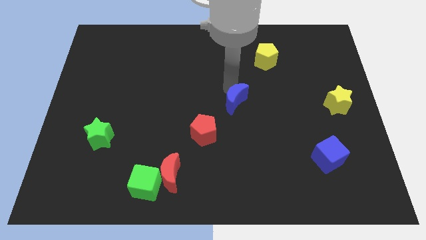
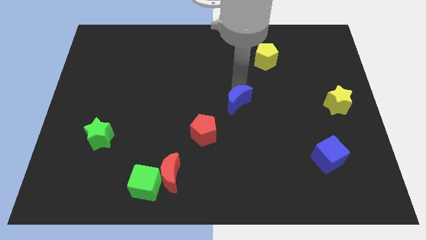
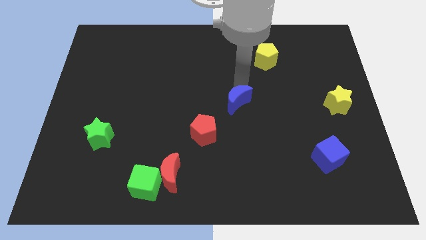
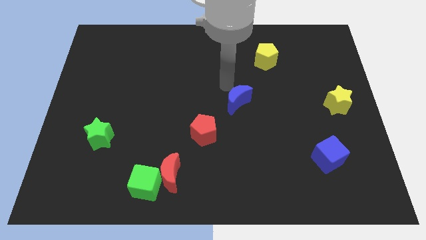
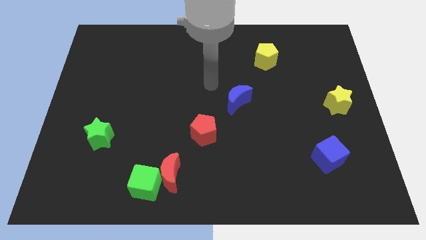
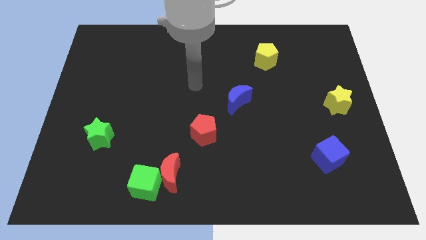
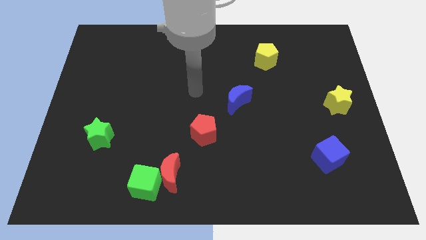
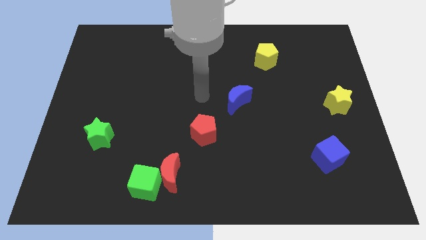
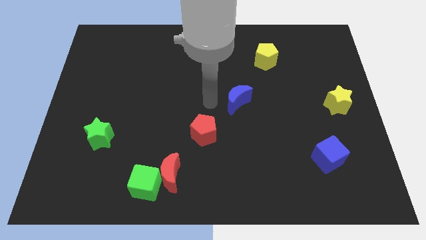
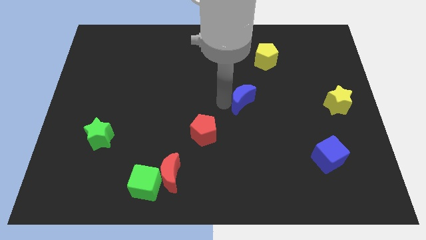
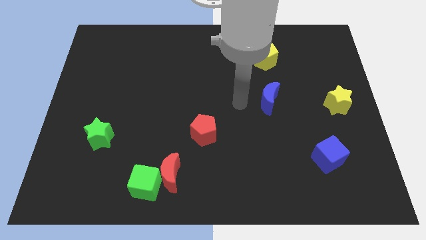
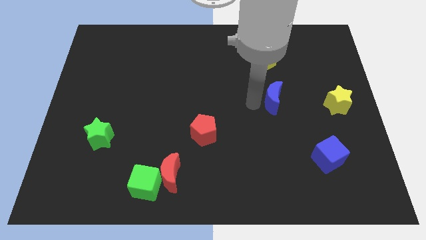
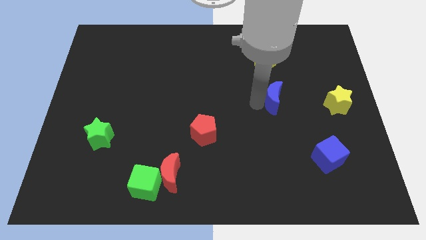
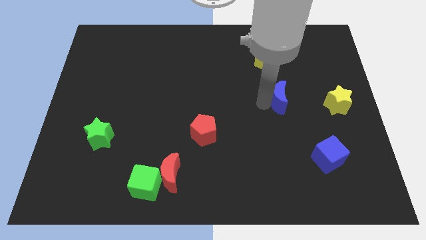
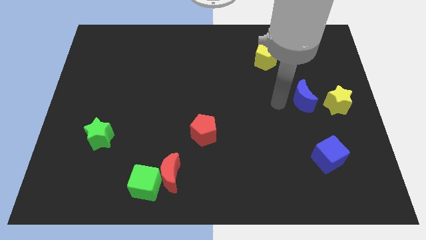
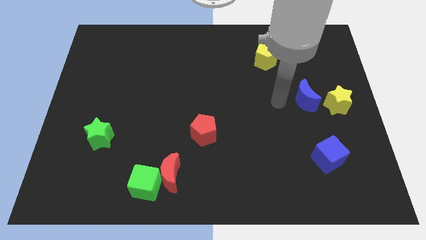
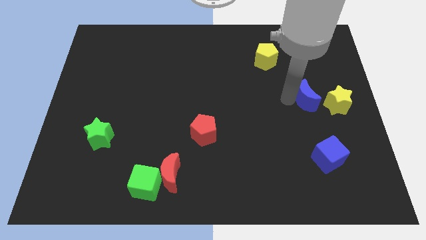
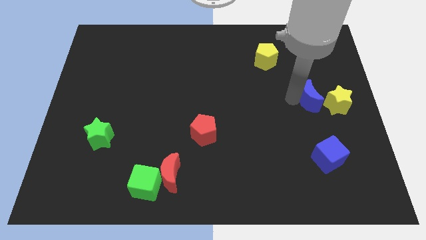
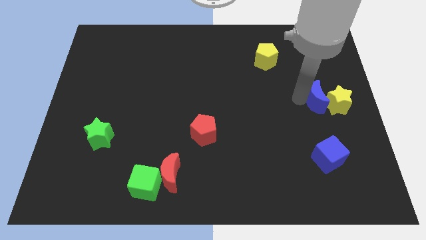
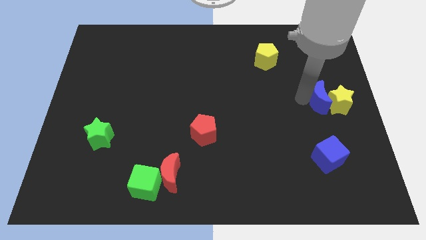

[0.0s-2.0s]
push the blue crescent to the left side of the yellow star

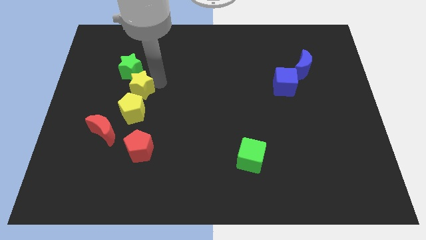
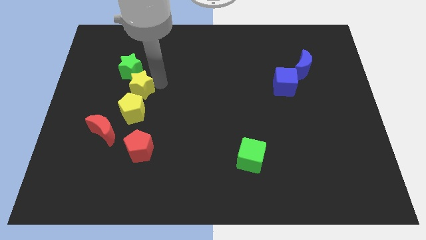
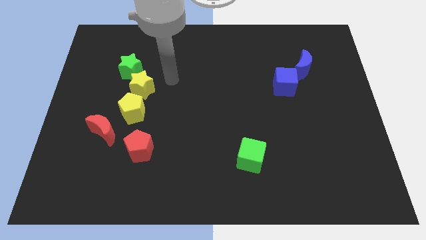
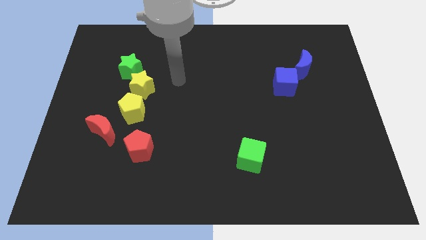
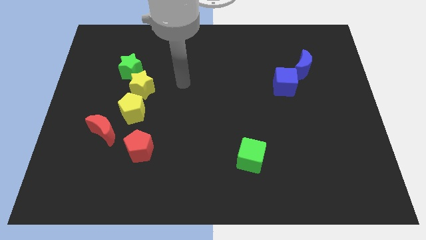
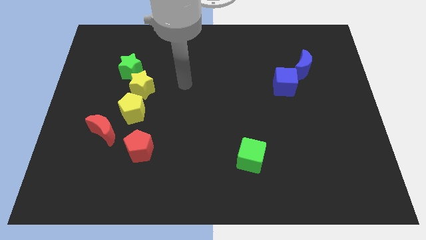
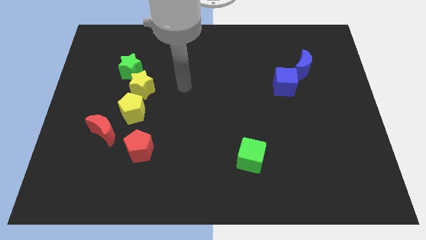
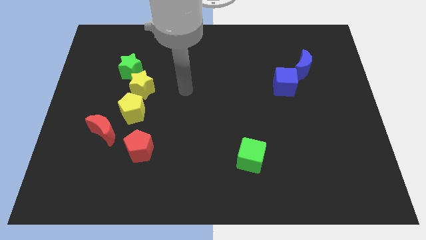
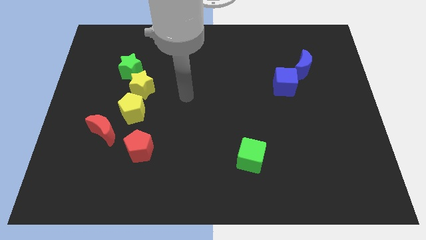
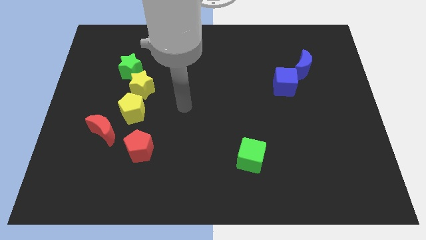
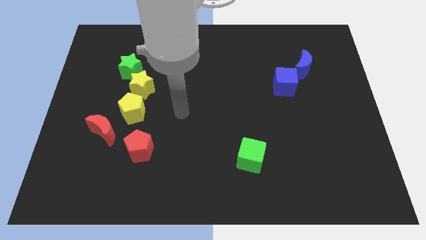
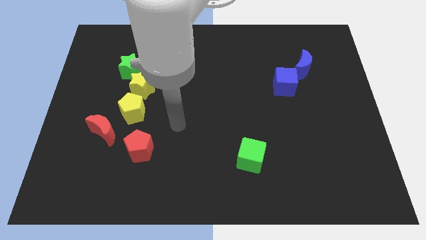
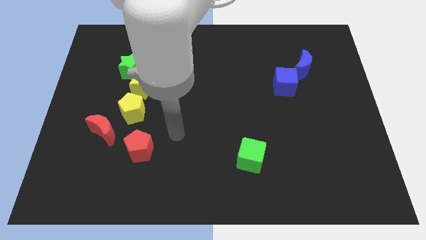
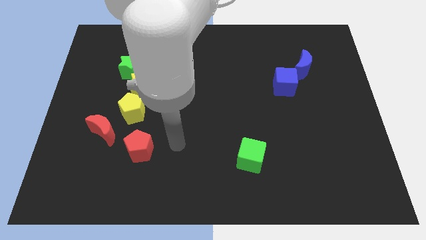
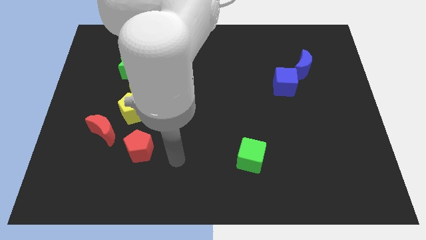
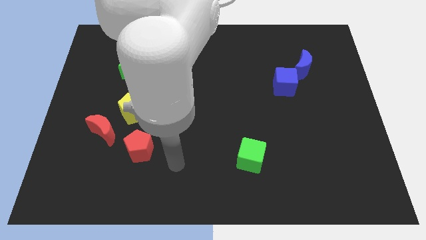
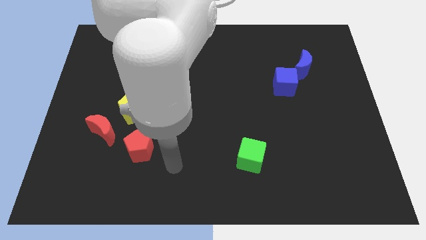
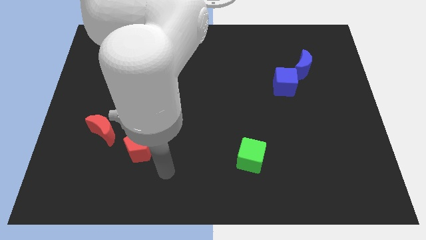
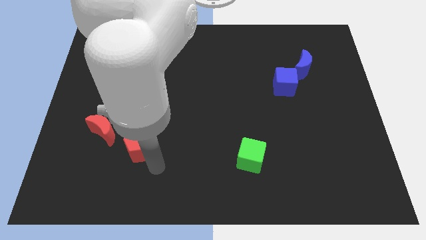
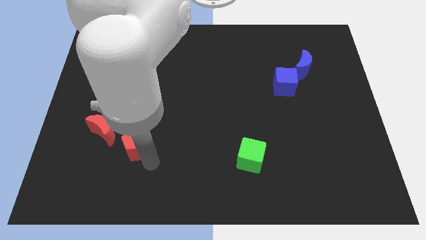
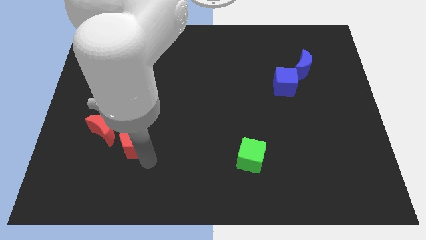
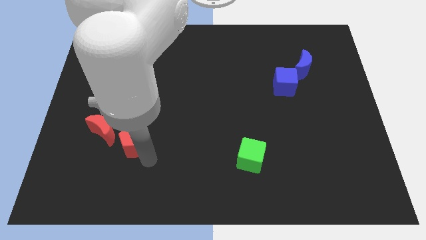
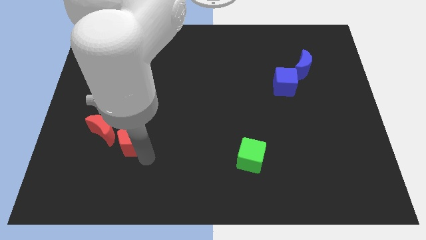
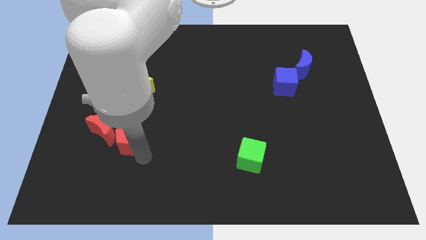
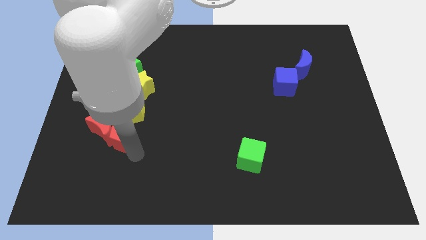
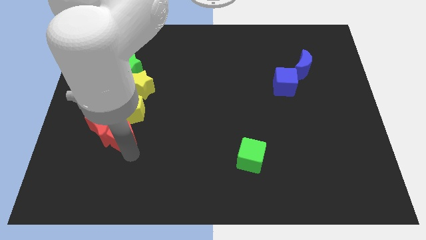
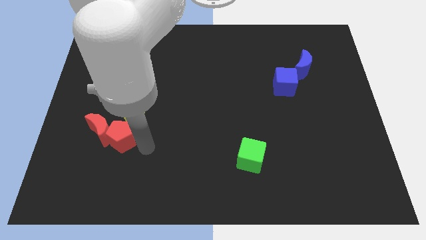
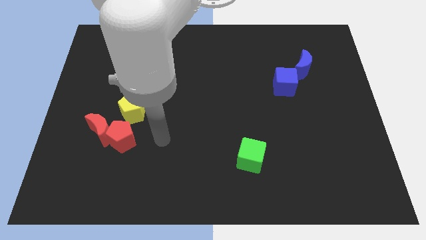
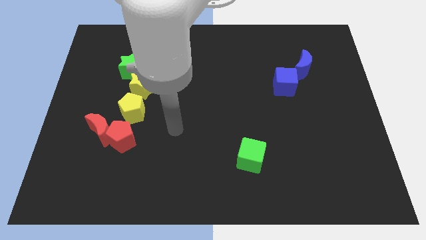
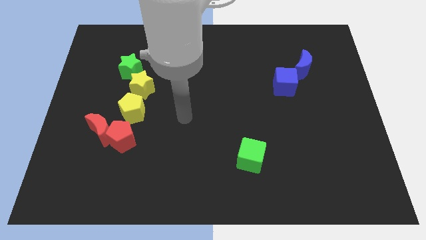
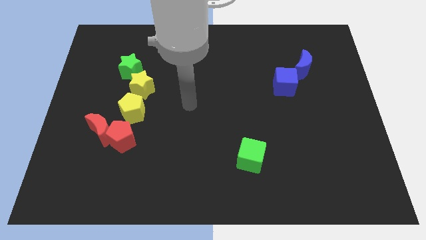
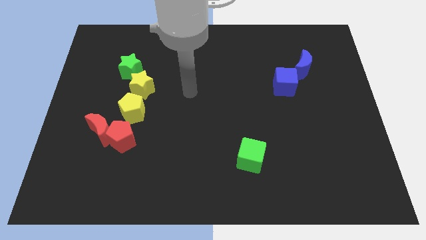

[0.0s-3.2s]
push the red pentagon close to the red crescent

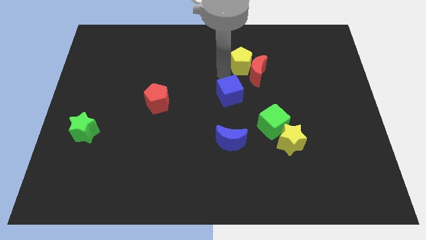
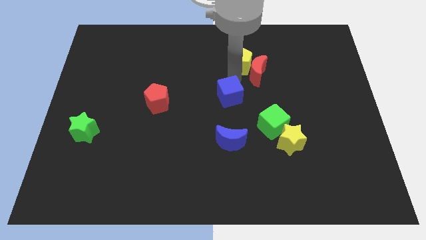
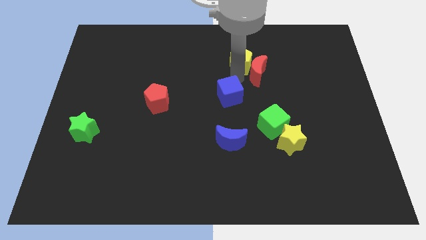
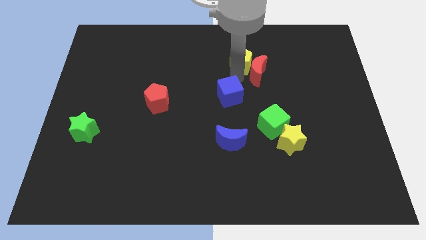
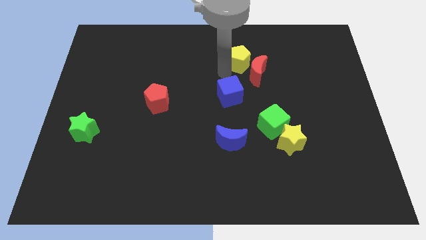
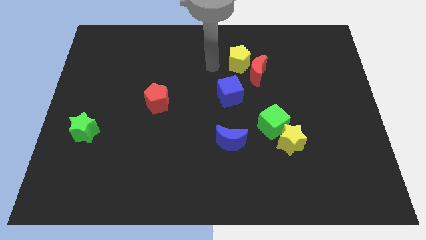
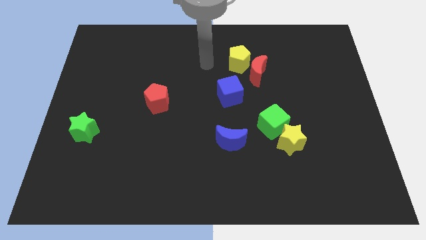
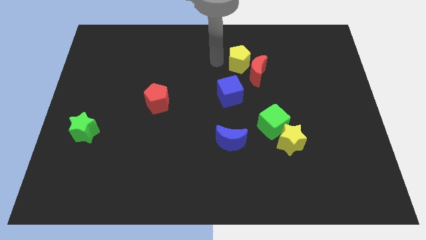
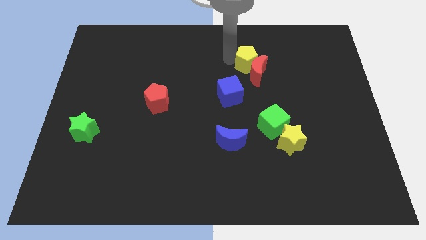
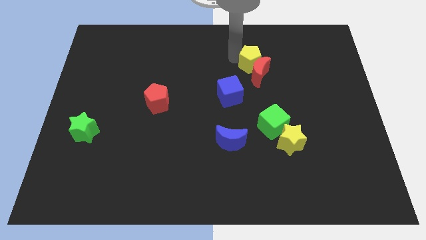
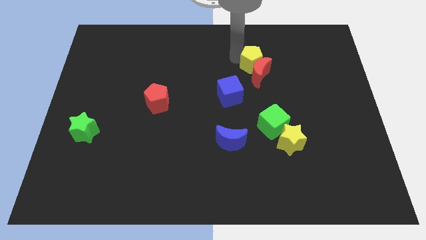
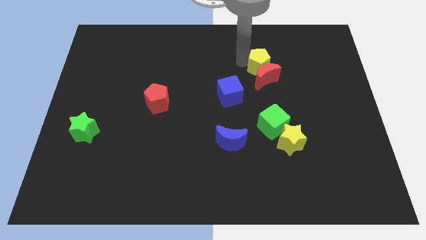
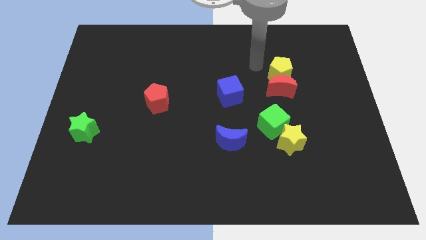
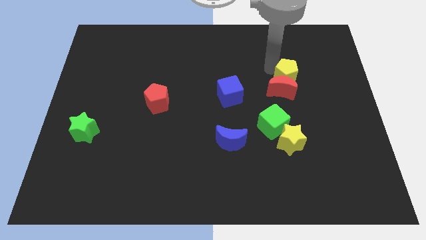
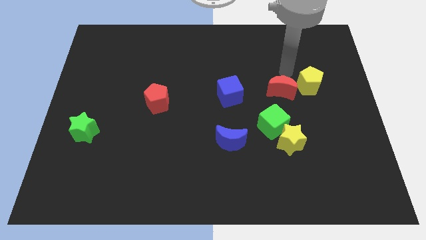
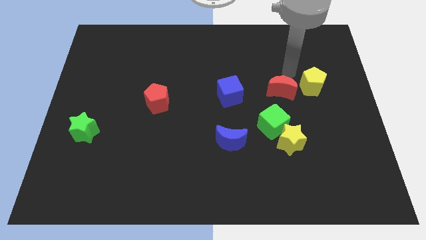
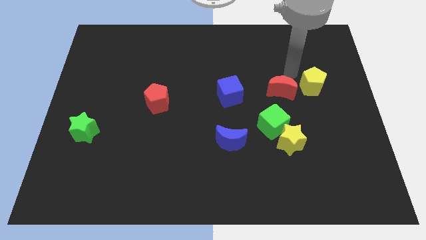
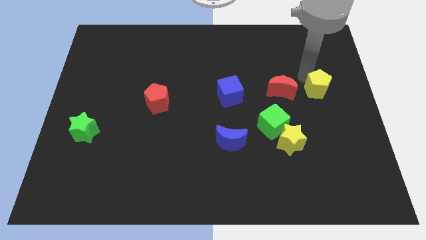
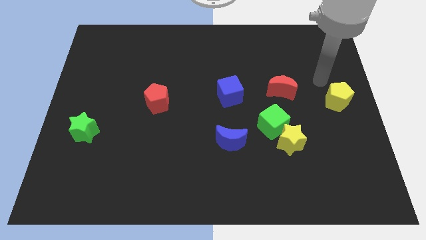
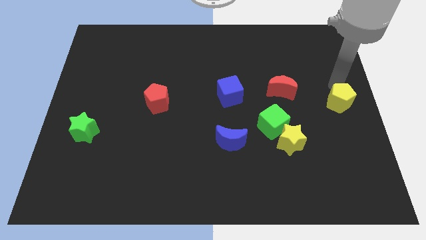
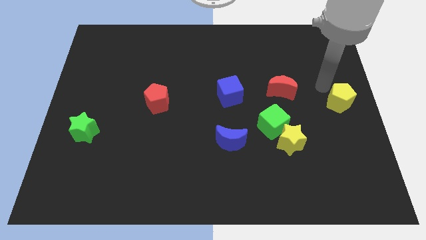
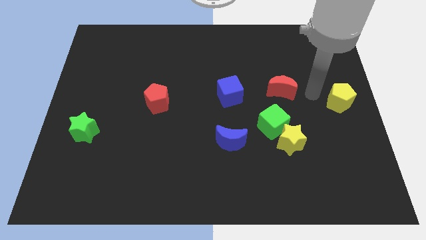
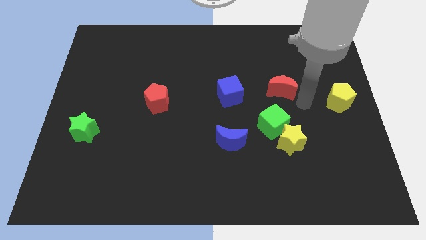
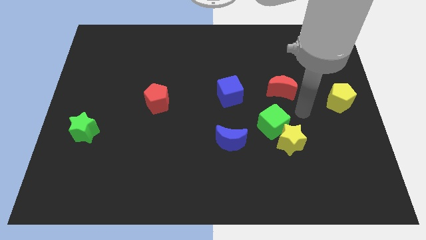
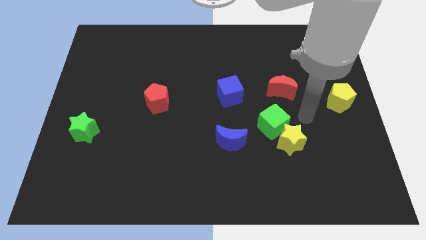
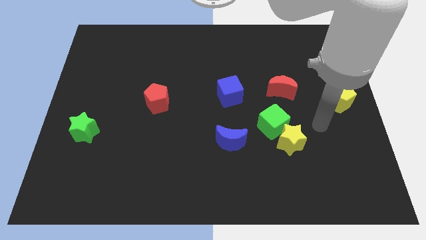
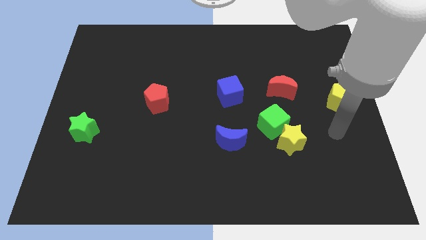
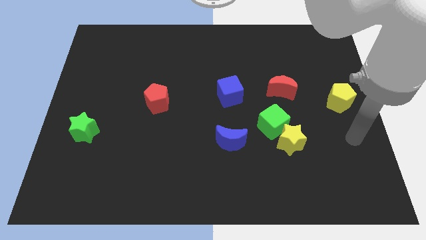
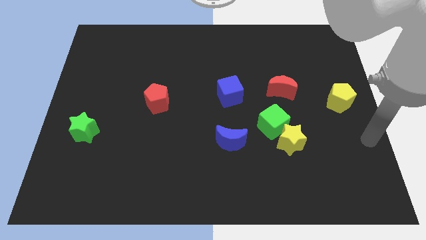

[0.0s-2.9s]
place the yellow pentagon right center

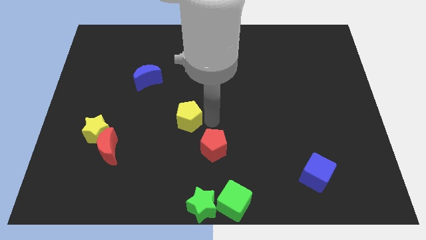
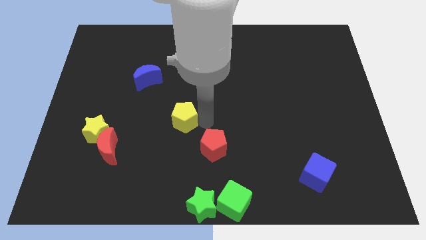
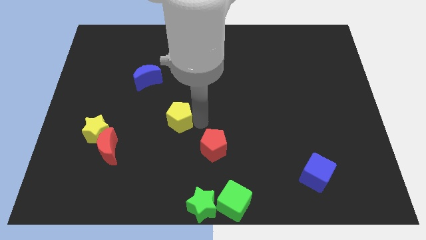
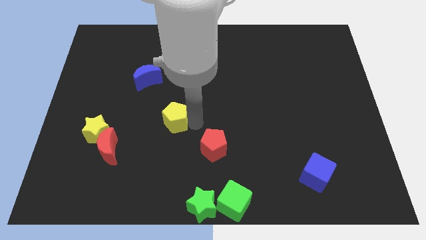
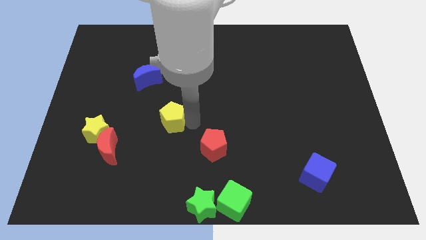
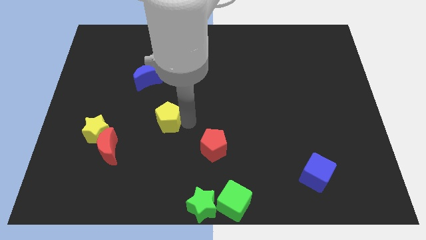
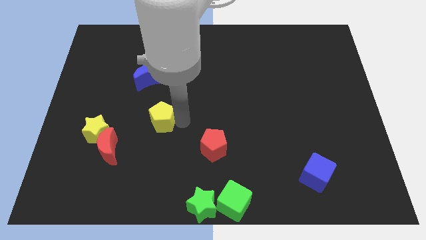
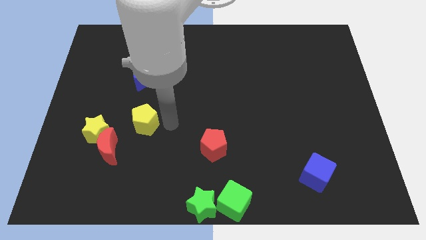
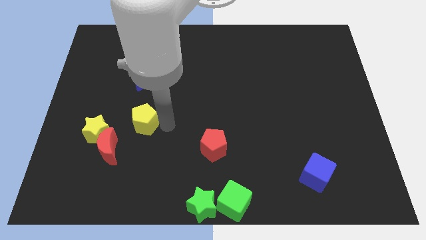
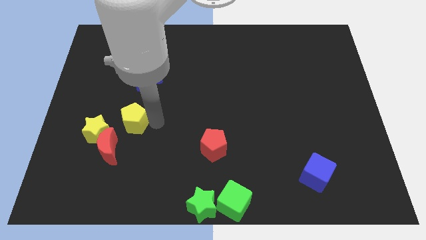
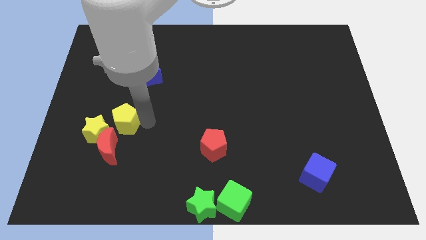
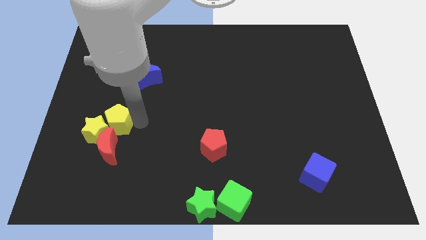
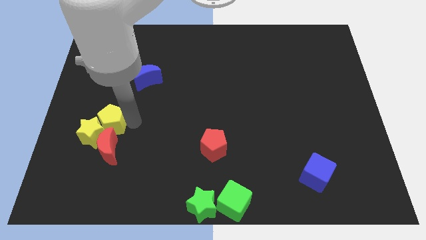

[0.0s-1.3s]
move the yellow pentagon into the yellow star
